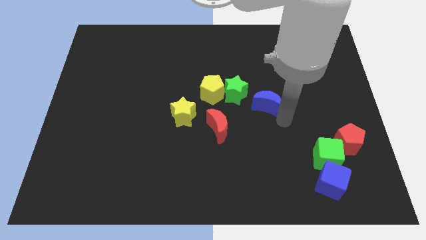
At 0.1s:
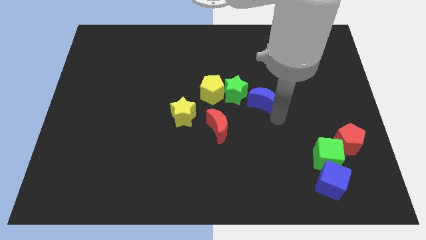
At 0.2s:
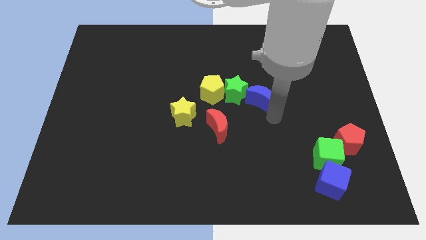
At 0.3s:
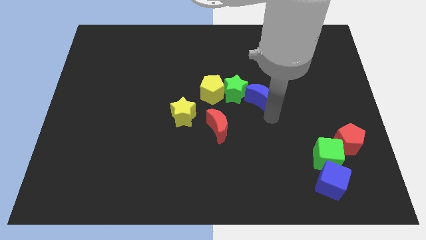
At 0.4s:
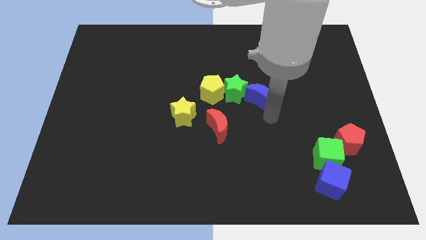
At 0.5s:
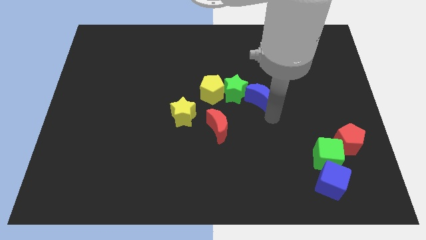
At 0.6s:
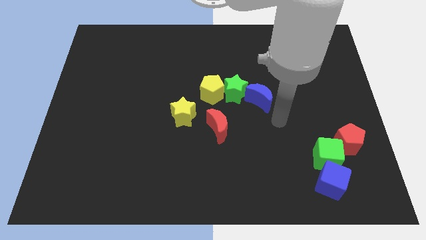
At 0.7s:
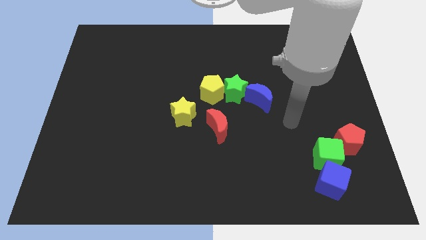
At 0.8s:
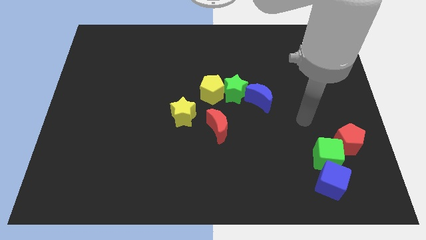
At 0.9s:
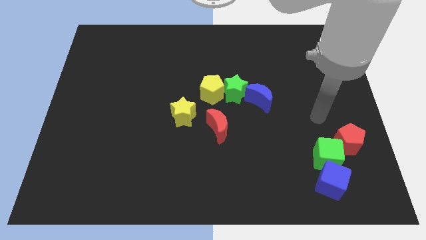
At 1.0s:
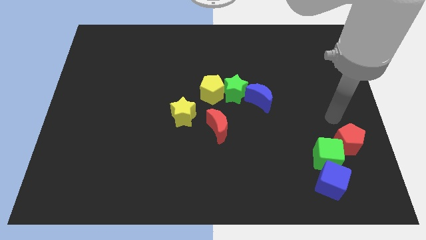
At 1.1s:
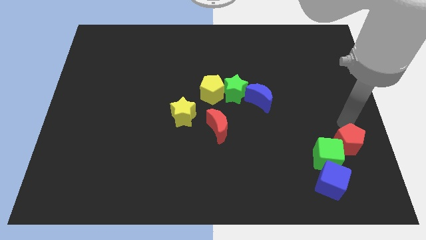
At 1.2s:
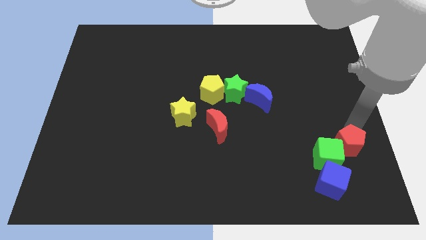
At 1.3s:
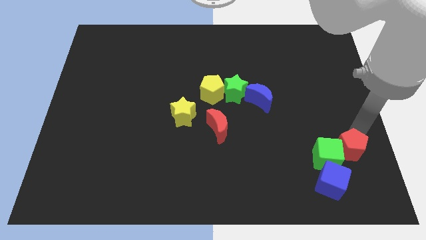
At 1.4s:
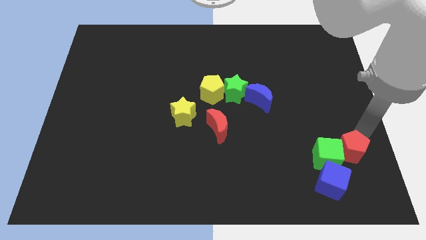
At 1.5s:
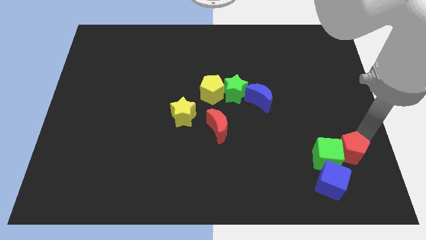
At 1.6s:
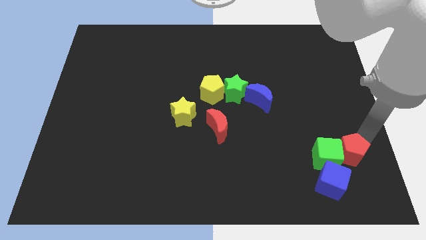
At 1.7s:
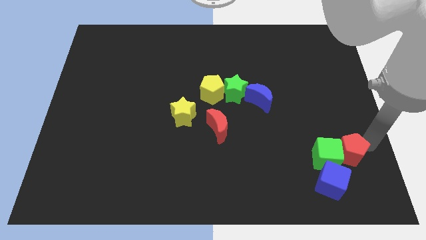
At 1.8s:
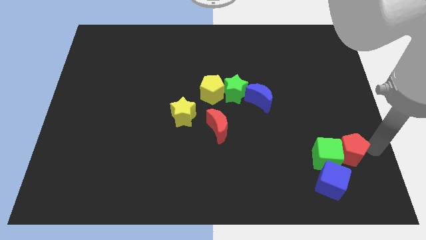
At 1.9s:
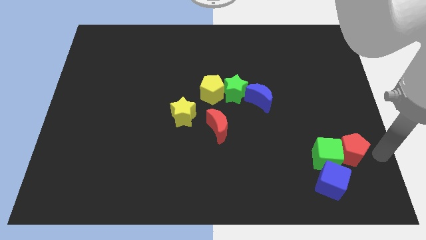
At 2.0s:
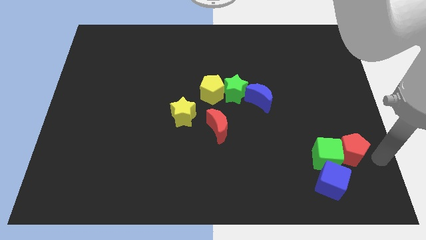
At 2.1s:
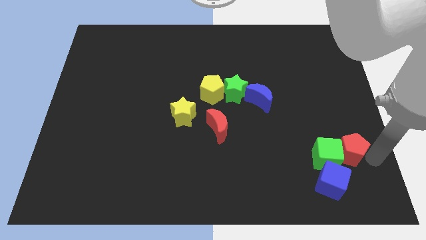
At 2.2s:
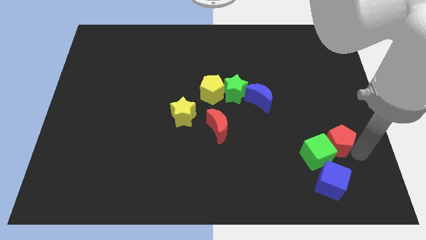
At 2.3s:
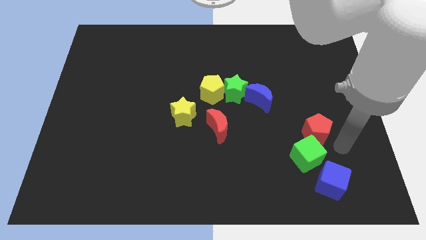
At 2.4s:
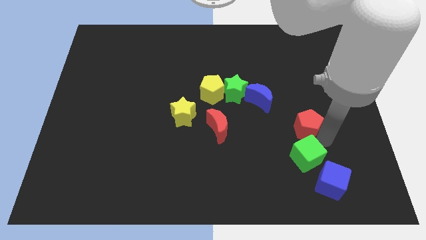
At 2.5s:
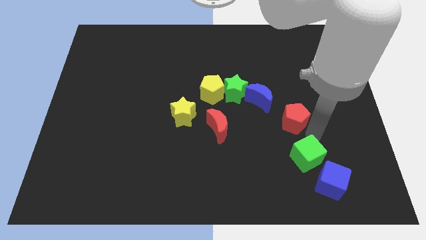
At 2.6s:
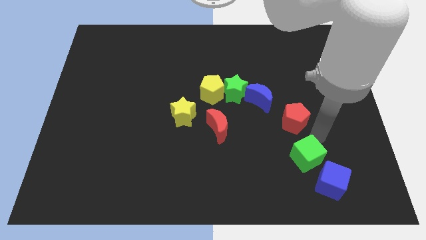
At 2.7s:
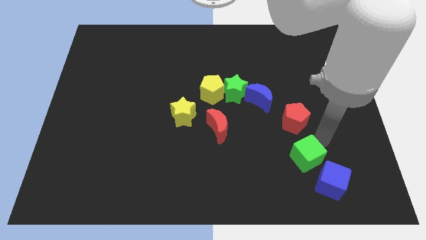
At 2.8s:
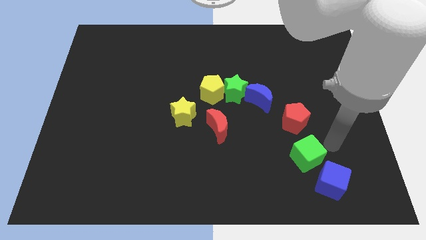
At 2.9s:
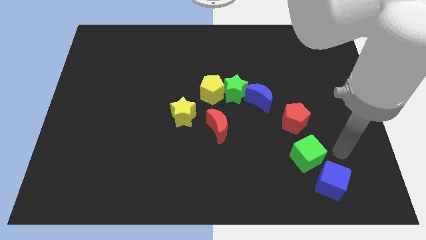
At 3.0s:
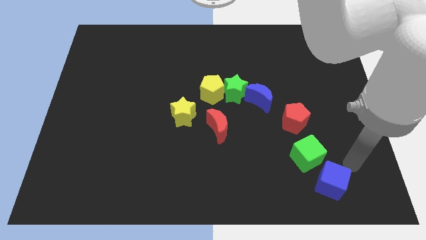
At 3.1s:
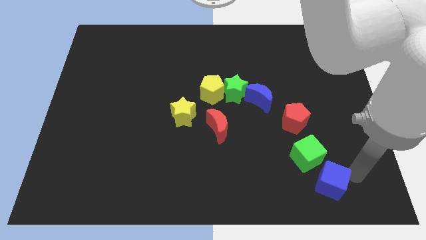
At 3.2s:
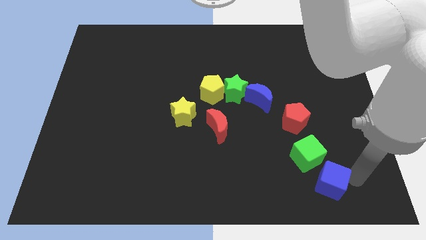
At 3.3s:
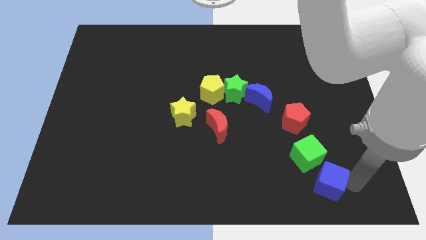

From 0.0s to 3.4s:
move red pentagon towards the blue crescent

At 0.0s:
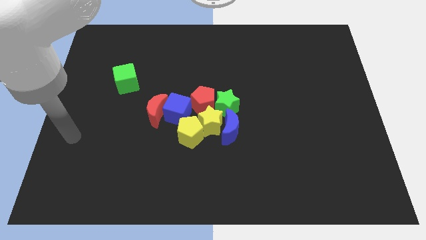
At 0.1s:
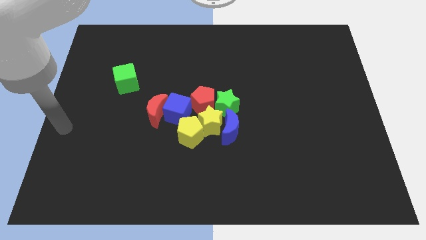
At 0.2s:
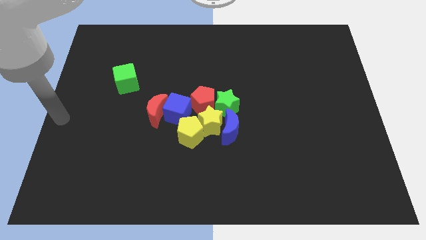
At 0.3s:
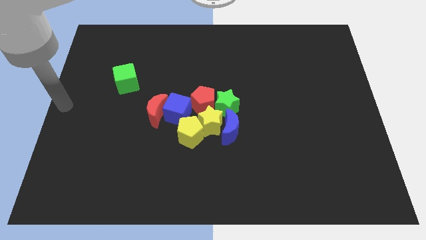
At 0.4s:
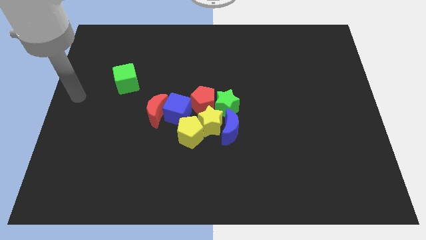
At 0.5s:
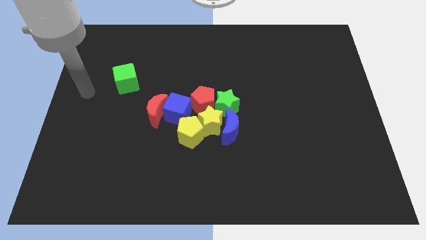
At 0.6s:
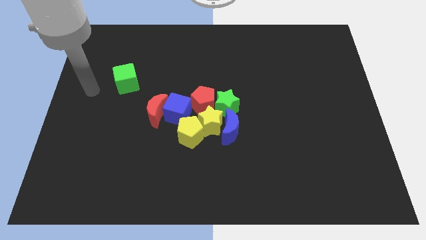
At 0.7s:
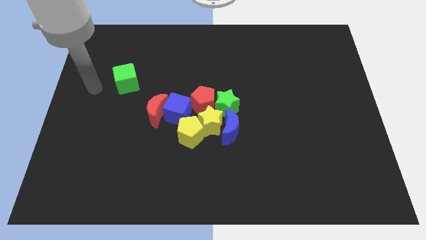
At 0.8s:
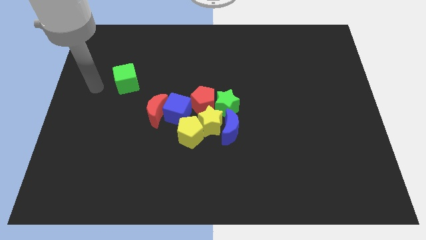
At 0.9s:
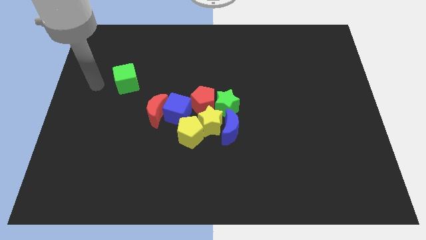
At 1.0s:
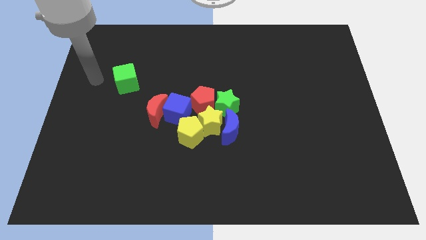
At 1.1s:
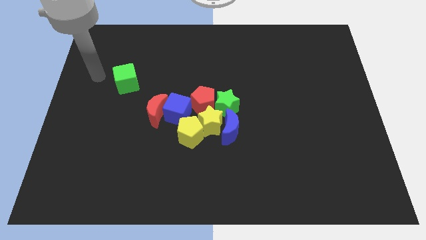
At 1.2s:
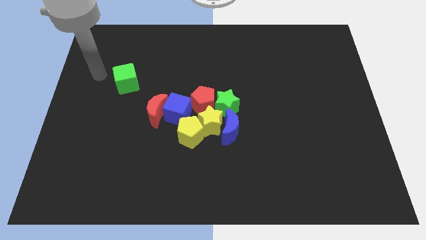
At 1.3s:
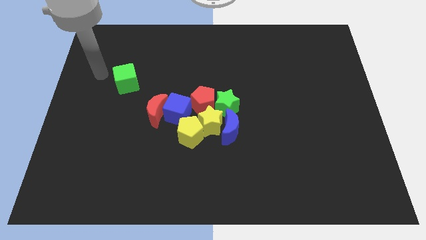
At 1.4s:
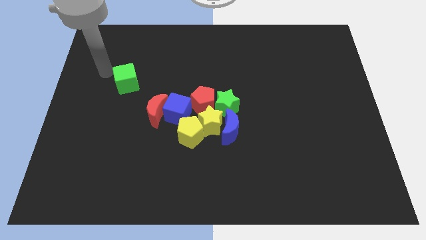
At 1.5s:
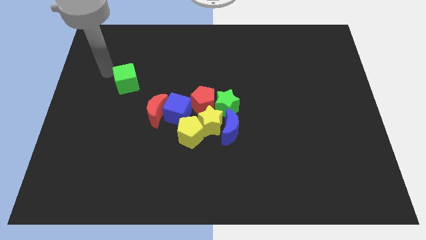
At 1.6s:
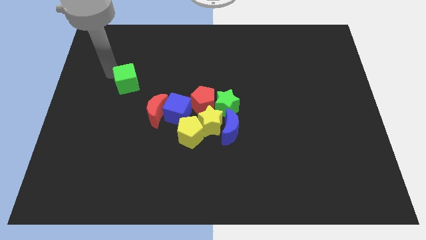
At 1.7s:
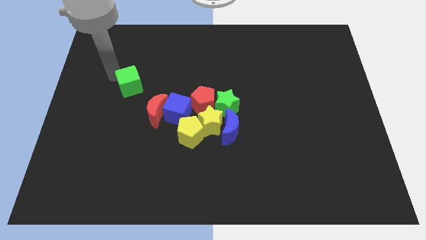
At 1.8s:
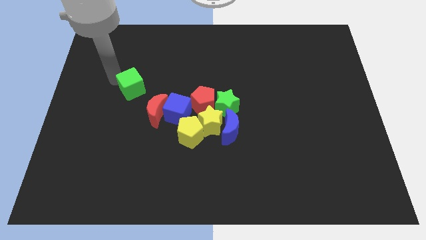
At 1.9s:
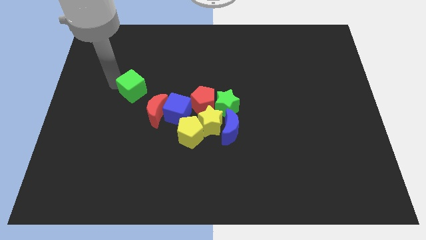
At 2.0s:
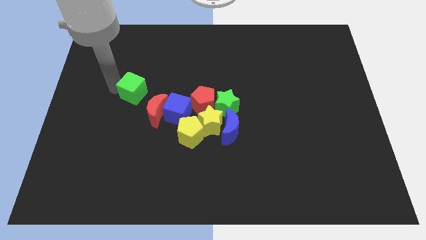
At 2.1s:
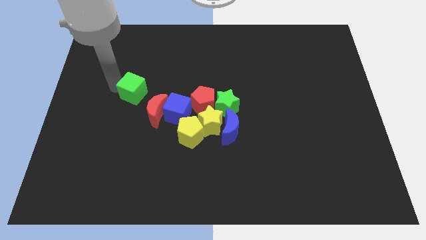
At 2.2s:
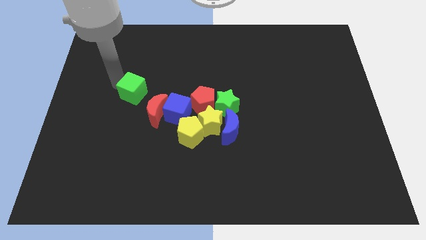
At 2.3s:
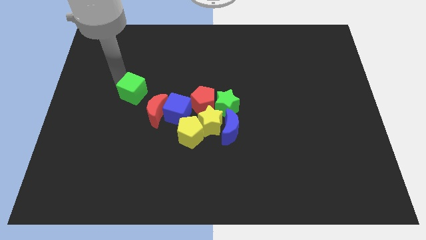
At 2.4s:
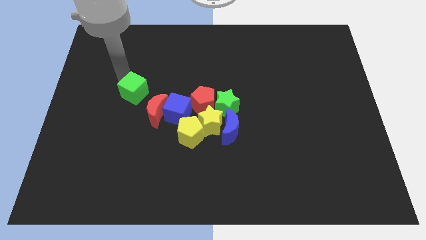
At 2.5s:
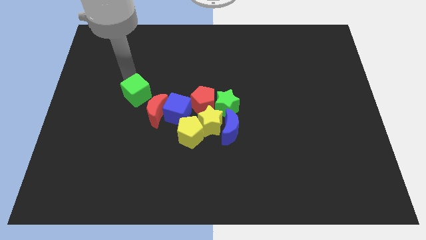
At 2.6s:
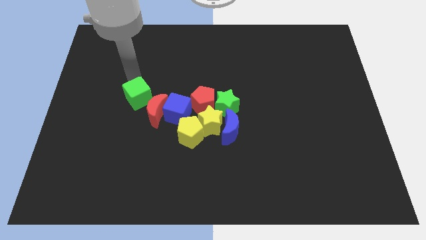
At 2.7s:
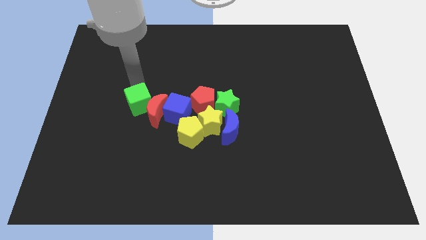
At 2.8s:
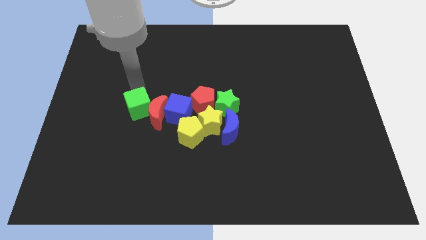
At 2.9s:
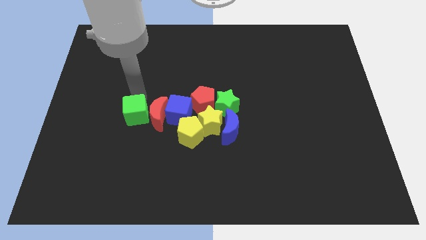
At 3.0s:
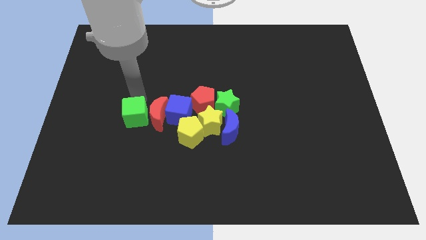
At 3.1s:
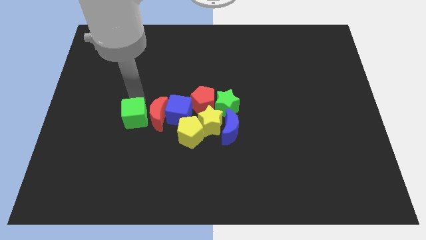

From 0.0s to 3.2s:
push the green cube to the left of the red crescent

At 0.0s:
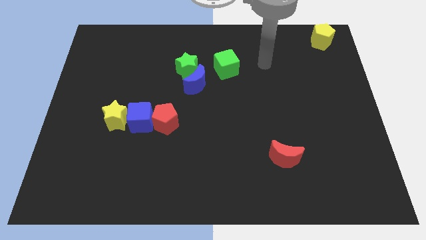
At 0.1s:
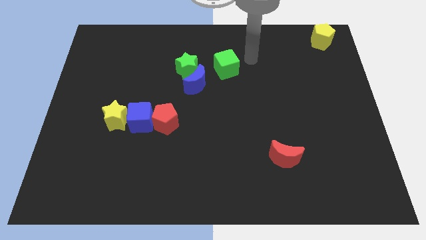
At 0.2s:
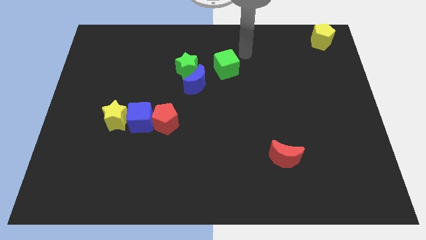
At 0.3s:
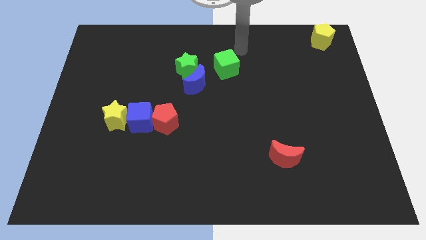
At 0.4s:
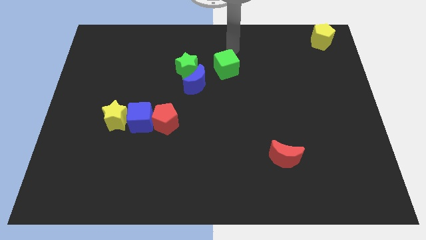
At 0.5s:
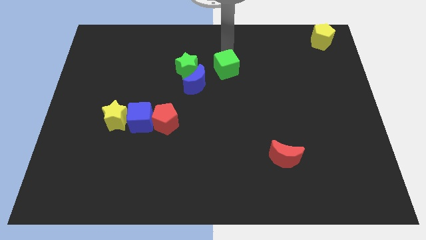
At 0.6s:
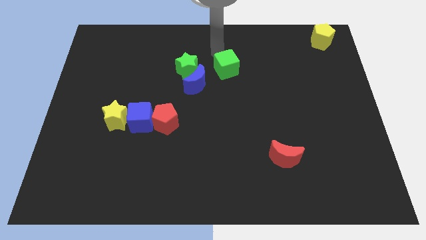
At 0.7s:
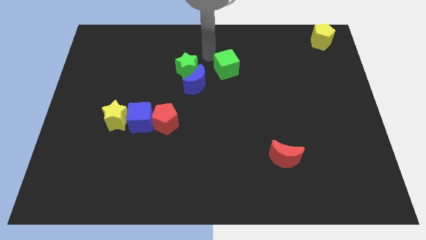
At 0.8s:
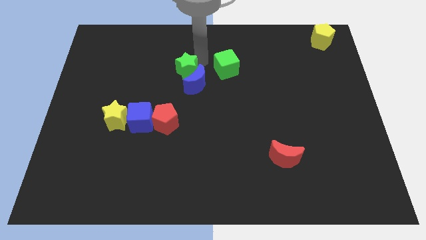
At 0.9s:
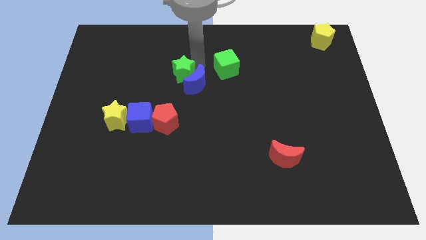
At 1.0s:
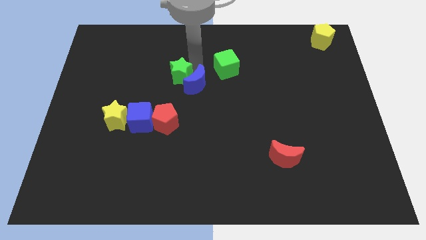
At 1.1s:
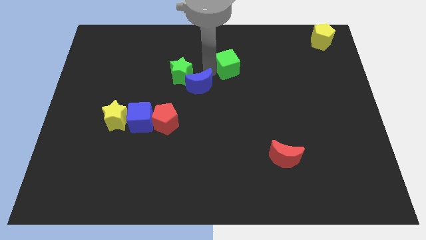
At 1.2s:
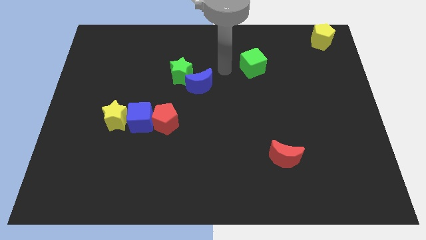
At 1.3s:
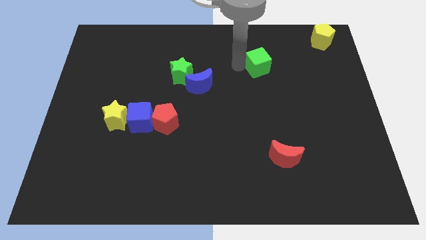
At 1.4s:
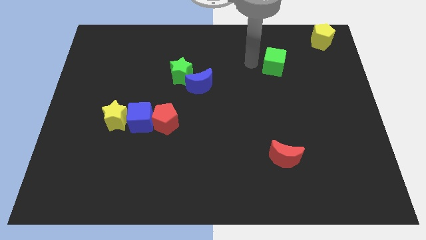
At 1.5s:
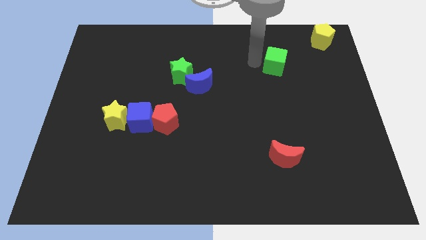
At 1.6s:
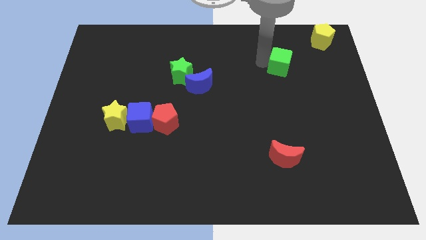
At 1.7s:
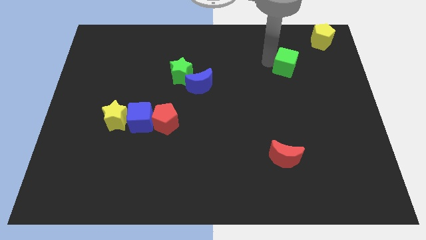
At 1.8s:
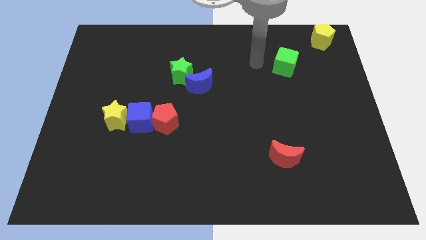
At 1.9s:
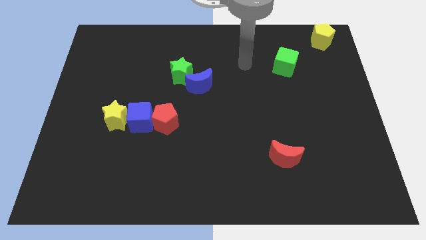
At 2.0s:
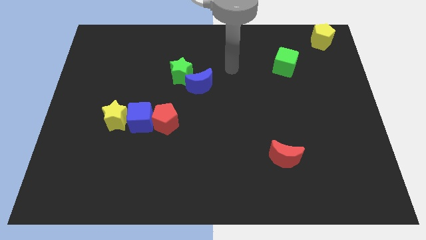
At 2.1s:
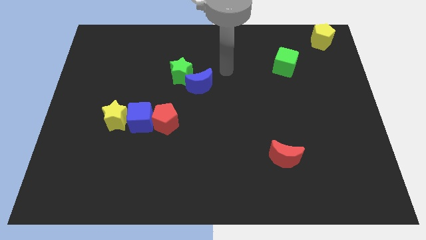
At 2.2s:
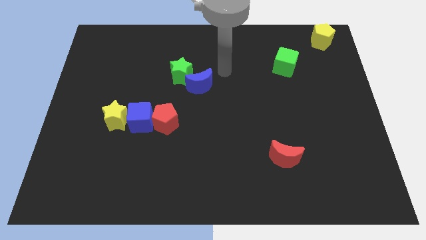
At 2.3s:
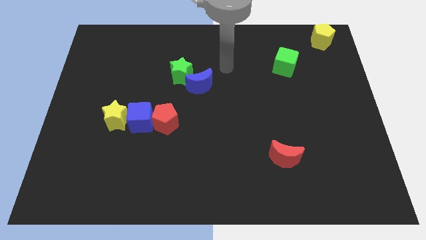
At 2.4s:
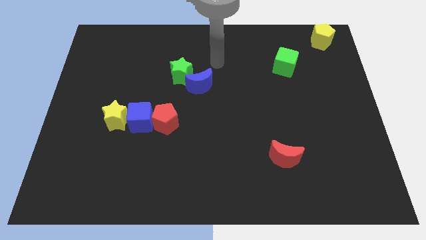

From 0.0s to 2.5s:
place the green block diagonally left to the yellow pentagon
